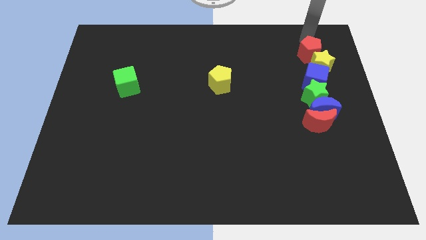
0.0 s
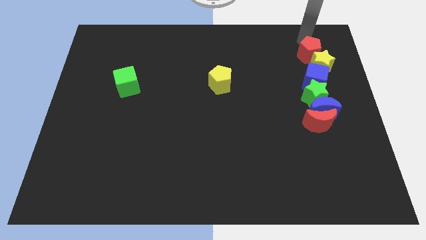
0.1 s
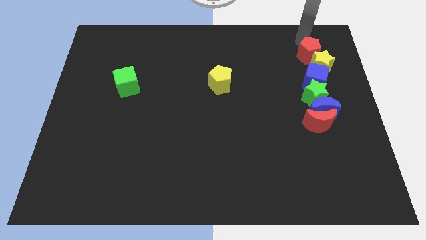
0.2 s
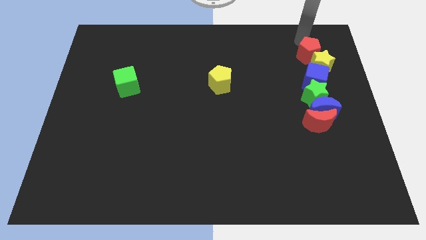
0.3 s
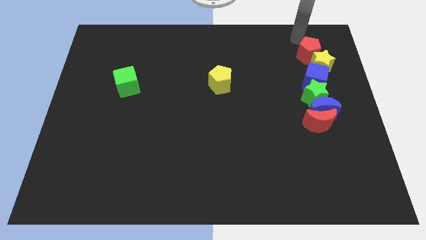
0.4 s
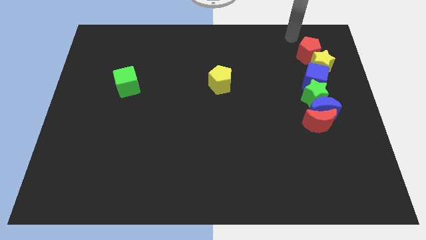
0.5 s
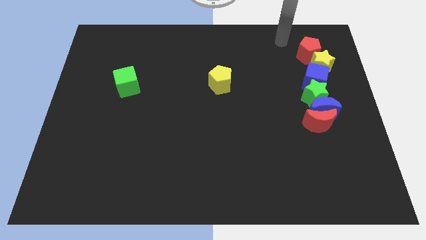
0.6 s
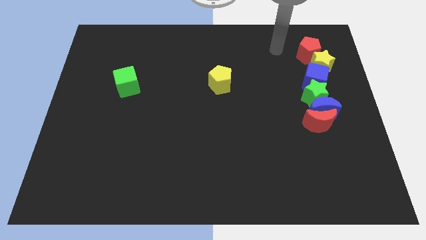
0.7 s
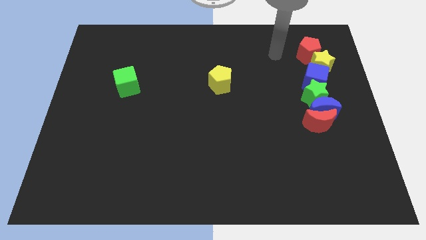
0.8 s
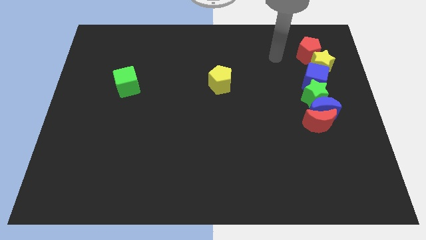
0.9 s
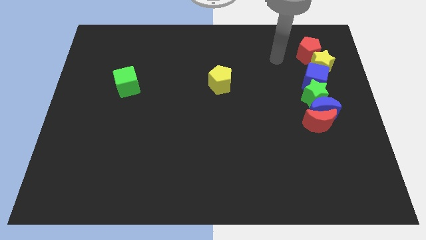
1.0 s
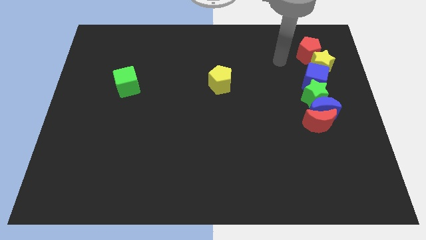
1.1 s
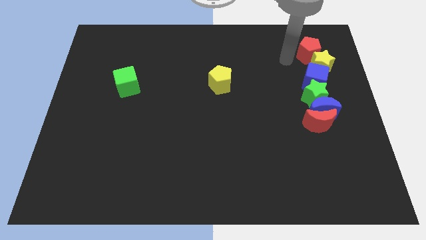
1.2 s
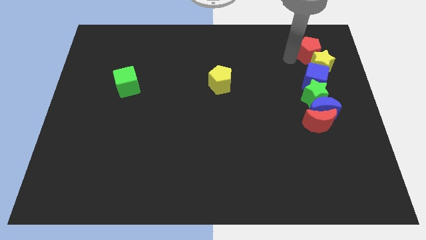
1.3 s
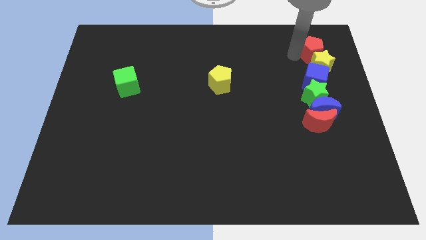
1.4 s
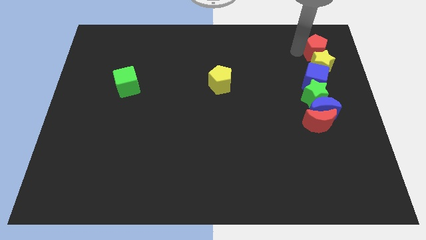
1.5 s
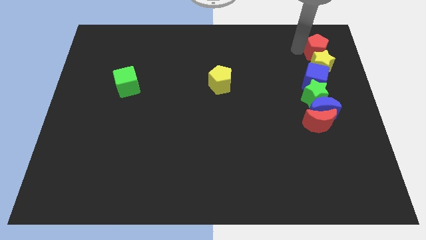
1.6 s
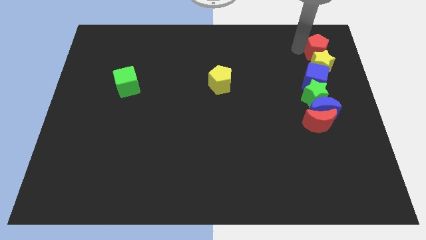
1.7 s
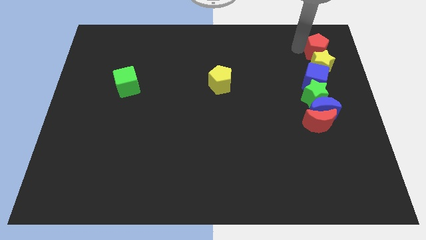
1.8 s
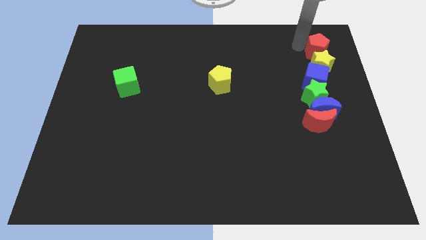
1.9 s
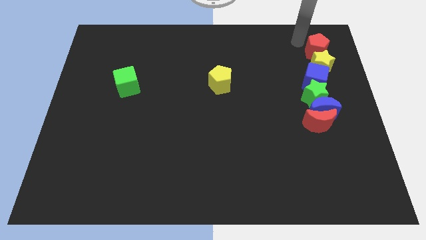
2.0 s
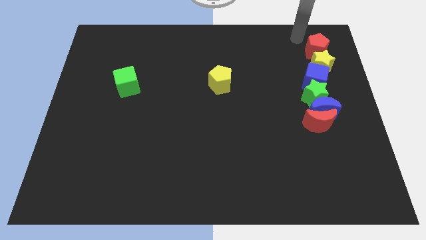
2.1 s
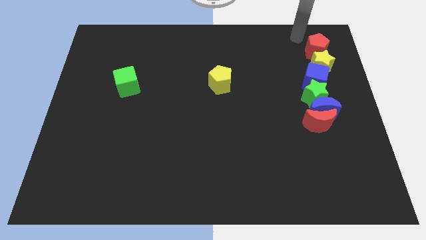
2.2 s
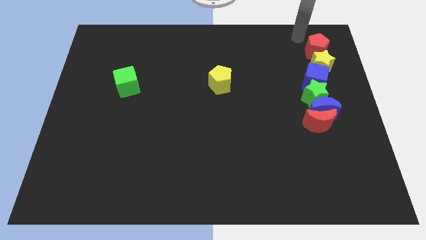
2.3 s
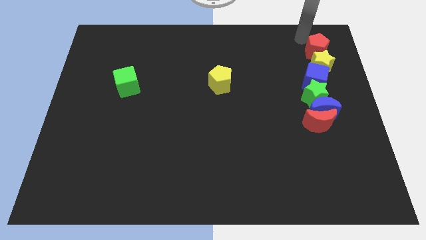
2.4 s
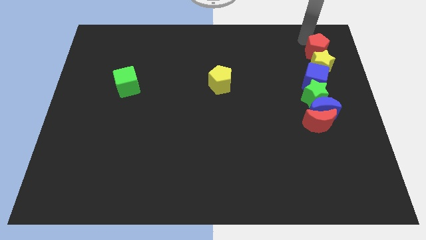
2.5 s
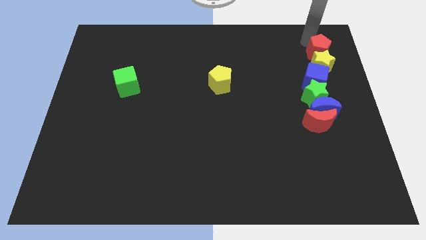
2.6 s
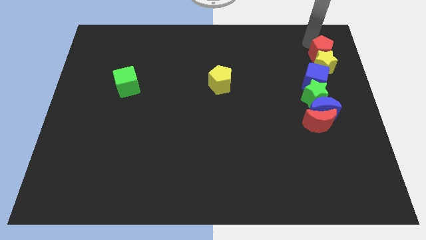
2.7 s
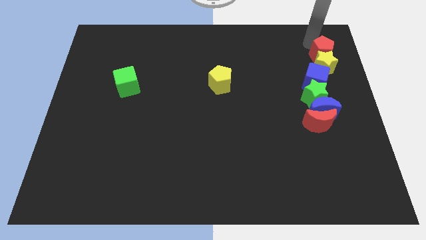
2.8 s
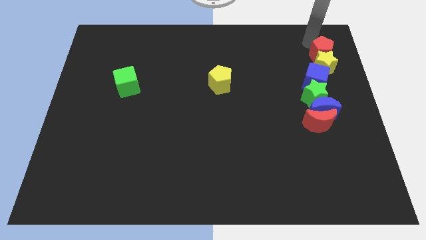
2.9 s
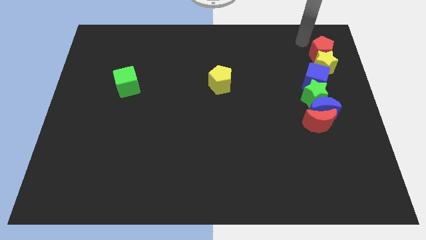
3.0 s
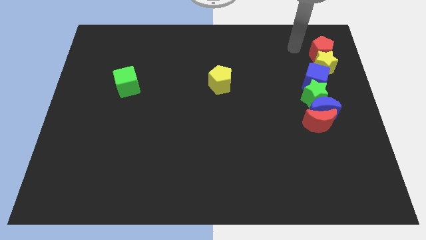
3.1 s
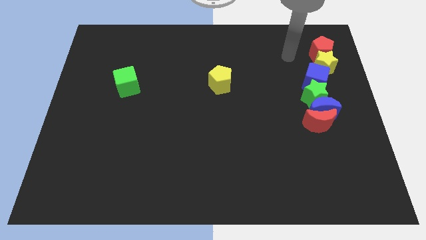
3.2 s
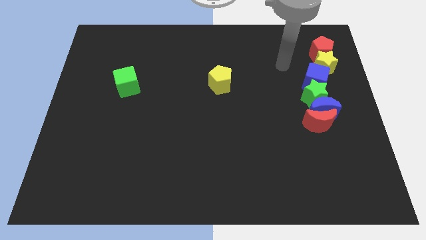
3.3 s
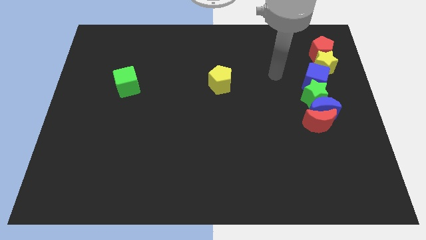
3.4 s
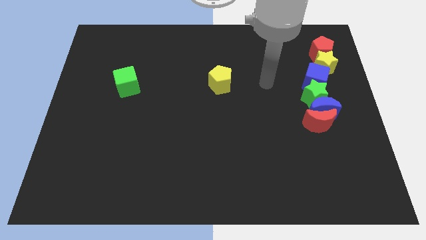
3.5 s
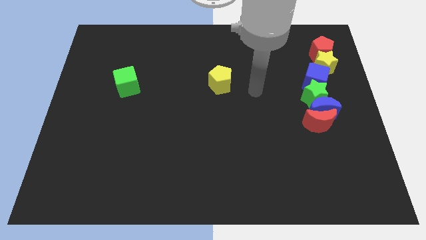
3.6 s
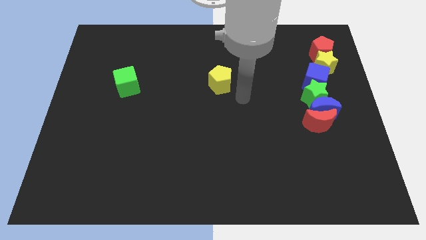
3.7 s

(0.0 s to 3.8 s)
slightly push the red pentagon into the yellow star

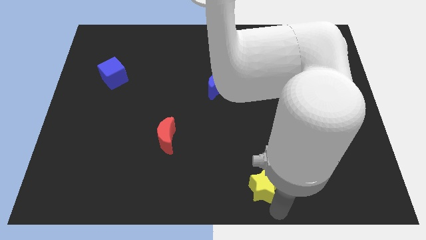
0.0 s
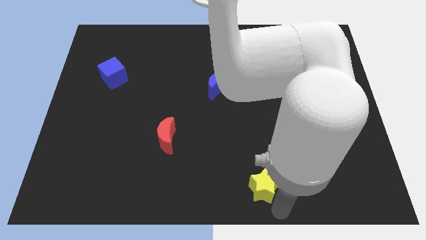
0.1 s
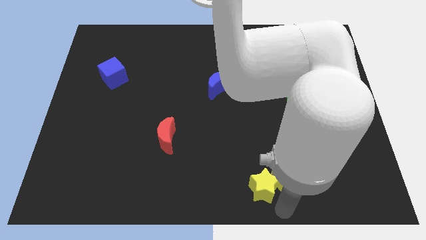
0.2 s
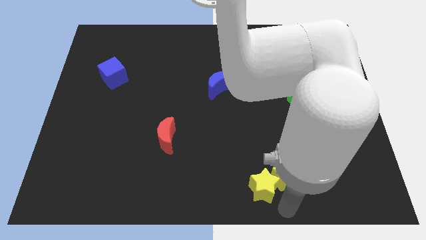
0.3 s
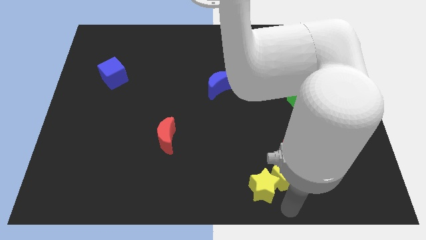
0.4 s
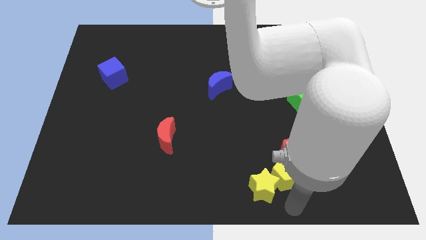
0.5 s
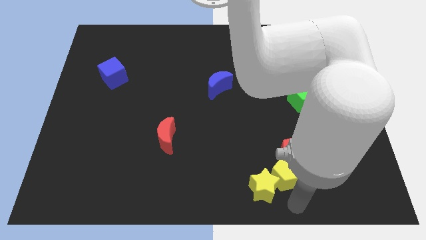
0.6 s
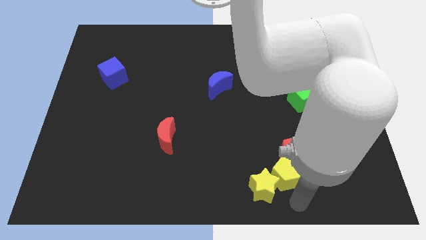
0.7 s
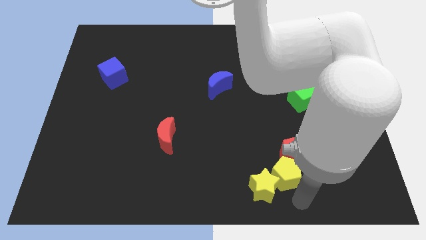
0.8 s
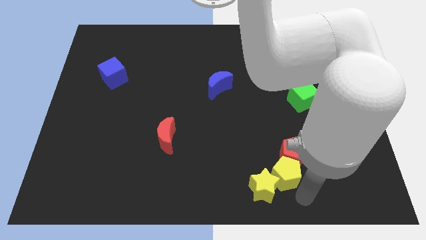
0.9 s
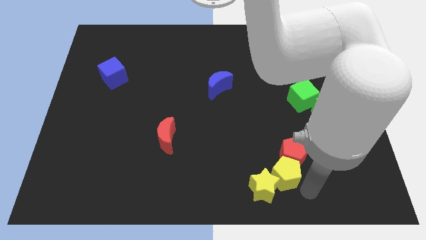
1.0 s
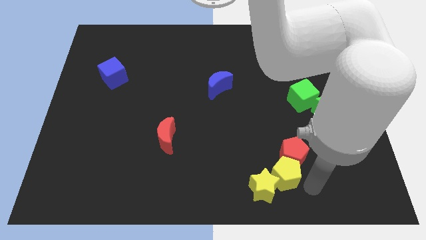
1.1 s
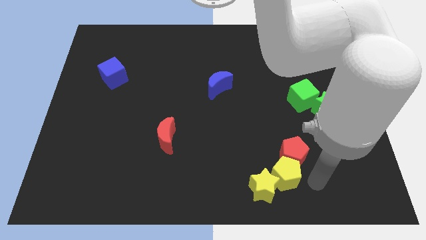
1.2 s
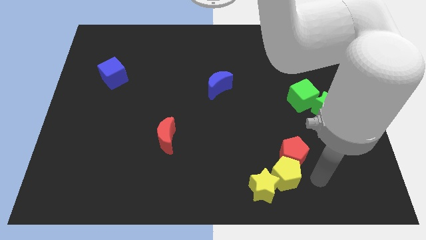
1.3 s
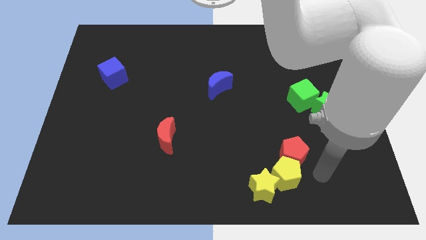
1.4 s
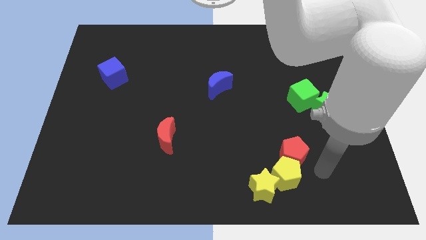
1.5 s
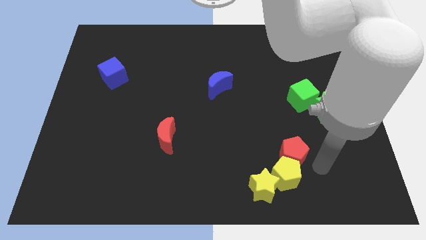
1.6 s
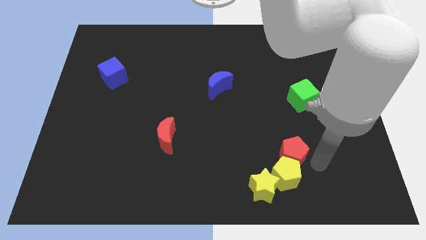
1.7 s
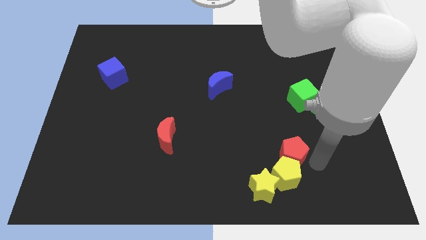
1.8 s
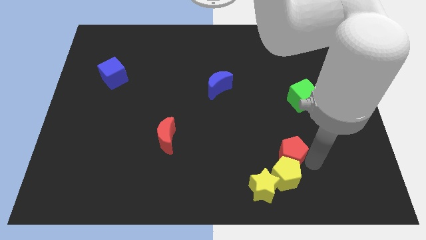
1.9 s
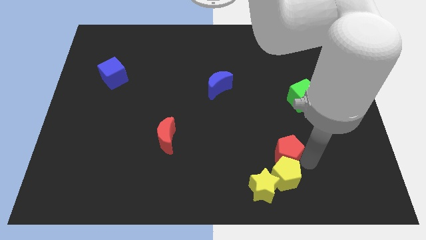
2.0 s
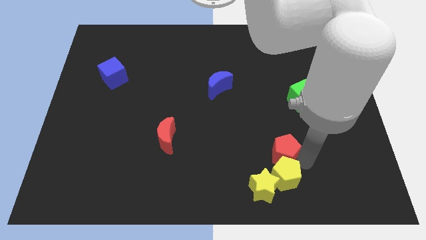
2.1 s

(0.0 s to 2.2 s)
tap the red pentagon

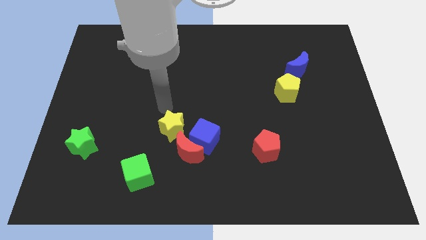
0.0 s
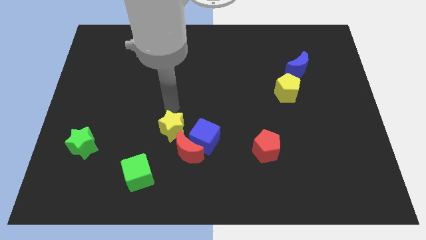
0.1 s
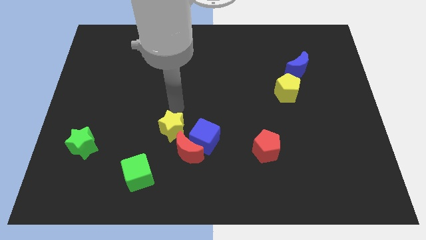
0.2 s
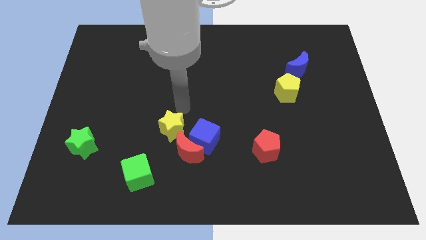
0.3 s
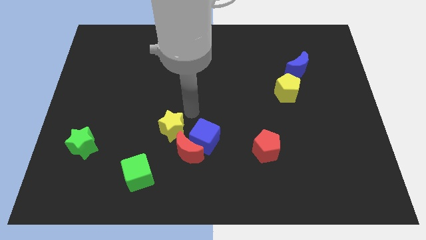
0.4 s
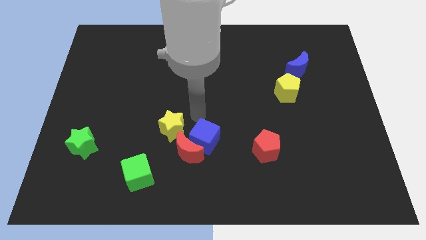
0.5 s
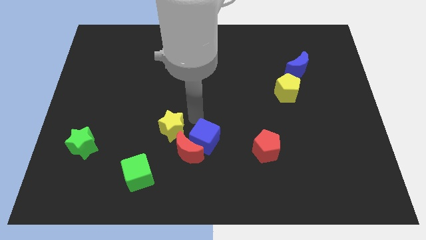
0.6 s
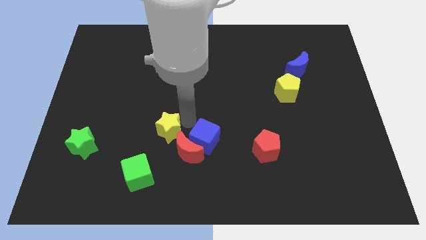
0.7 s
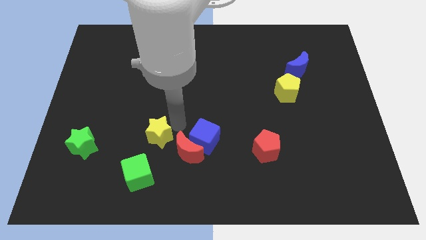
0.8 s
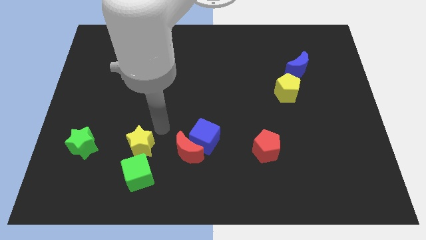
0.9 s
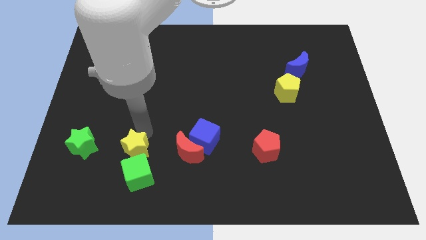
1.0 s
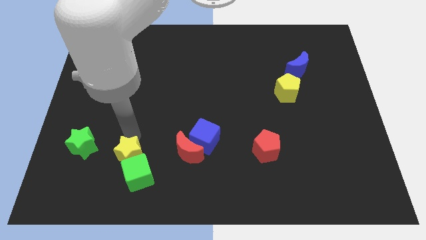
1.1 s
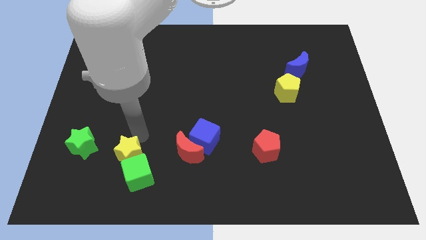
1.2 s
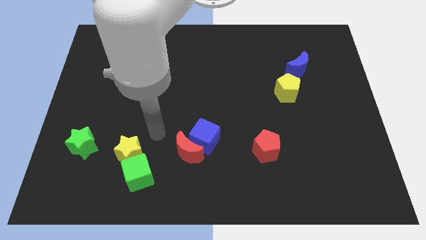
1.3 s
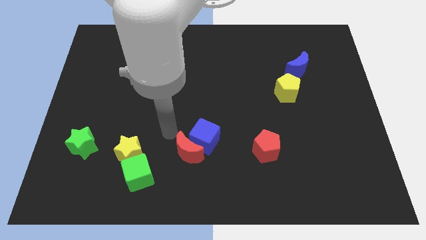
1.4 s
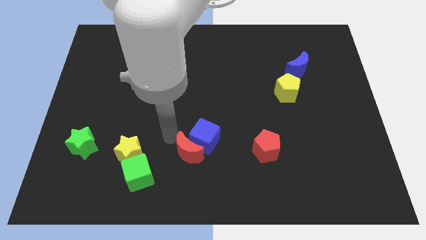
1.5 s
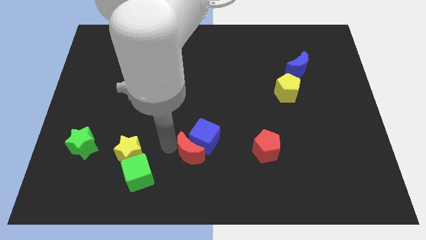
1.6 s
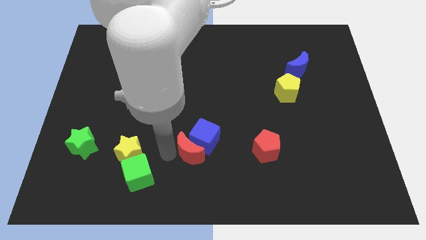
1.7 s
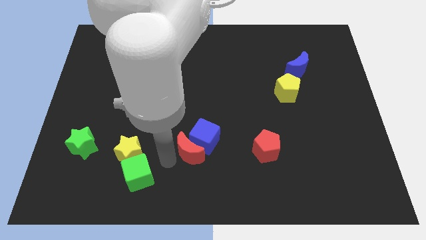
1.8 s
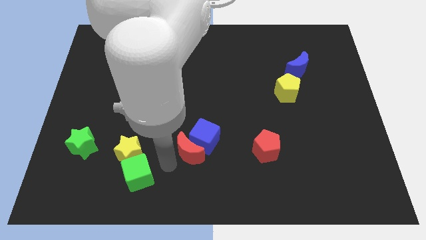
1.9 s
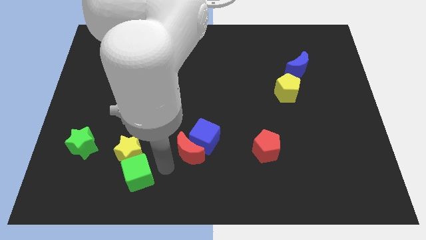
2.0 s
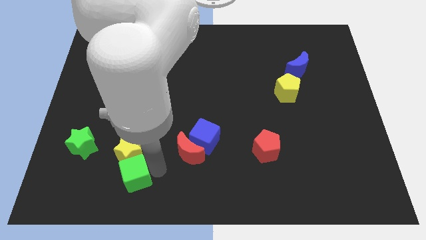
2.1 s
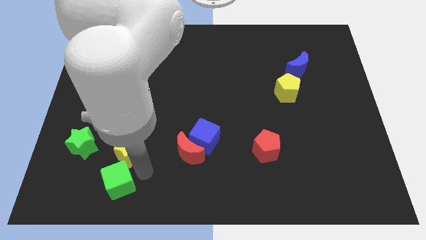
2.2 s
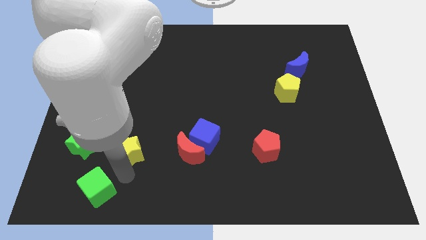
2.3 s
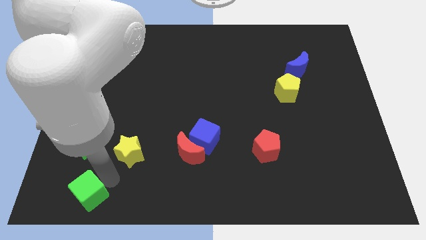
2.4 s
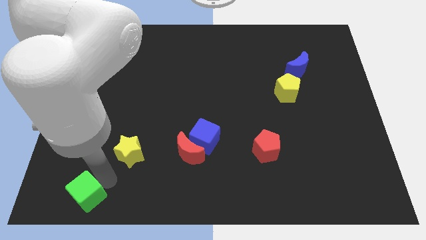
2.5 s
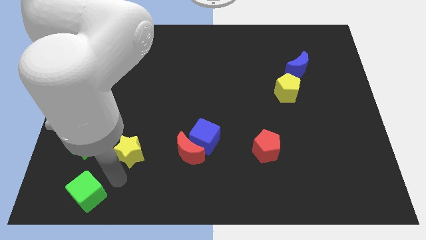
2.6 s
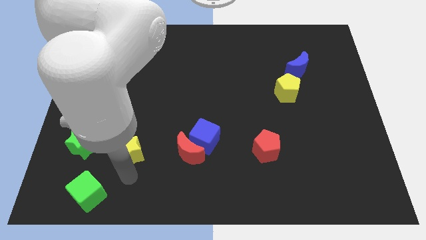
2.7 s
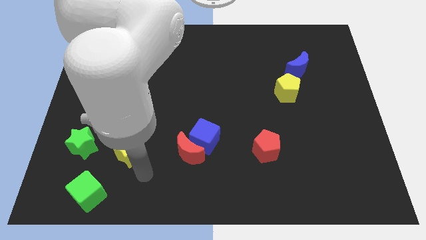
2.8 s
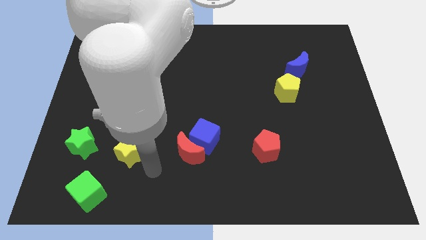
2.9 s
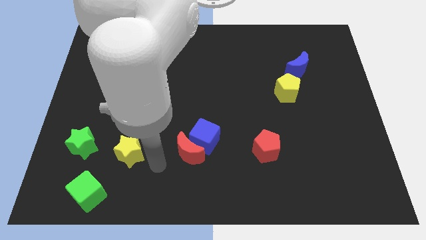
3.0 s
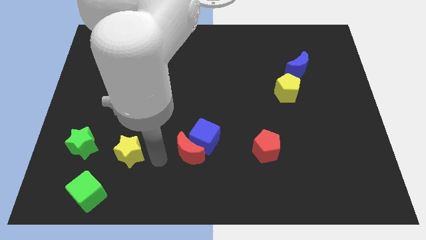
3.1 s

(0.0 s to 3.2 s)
move the green cube below the green star
